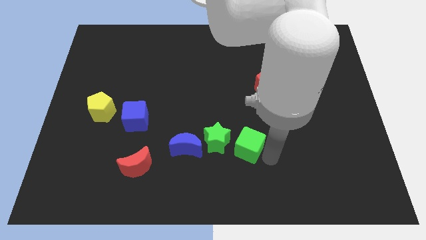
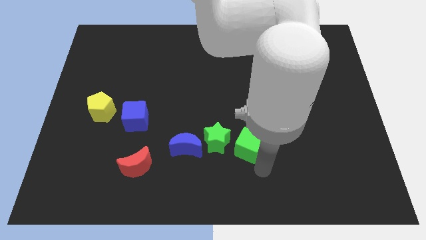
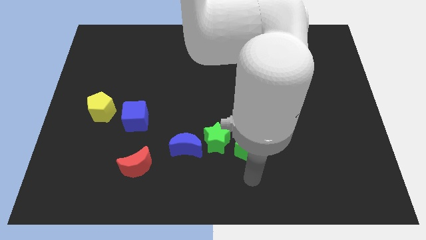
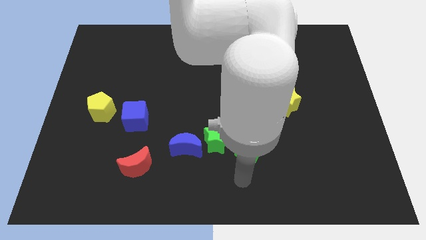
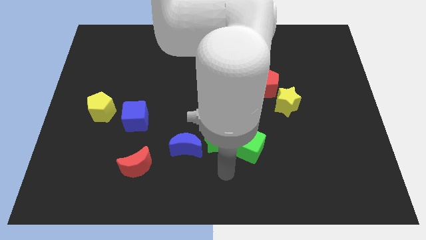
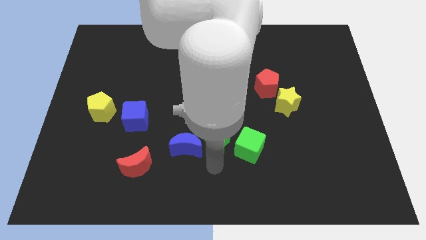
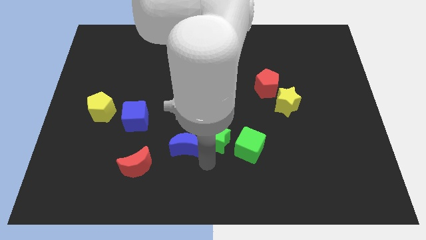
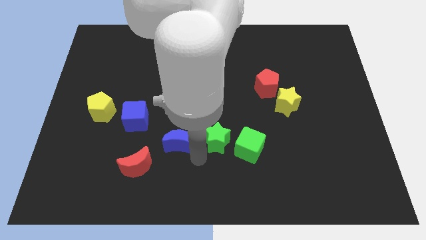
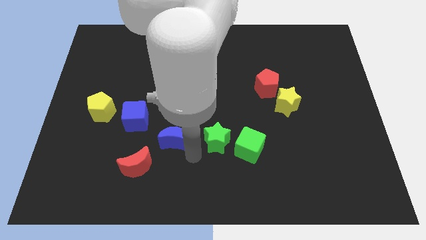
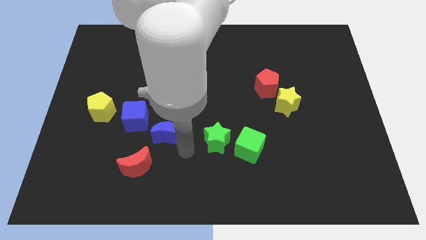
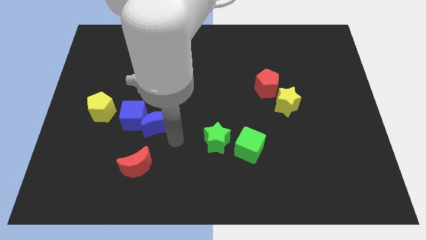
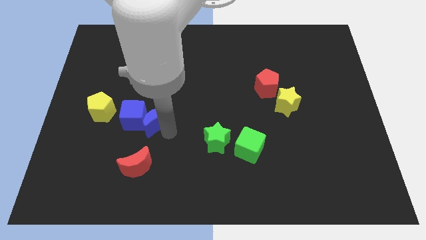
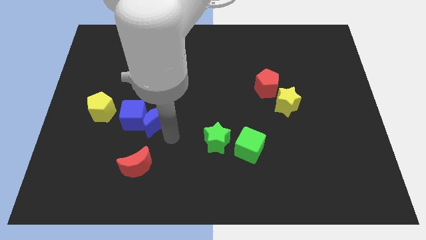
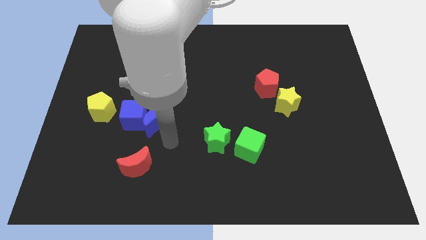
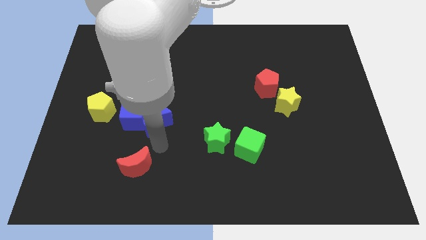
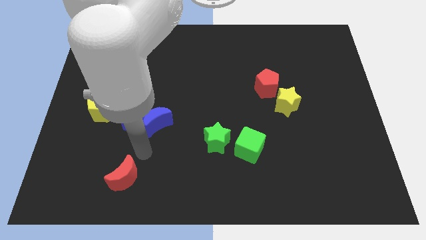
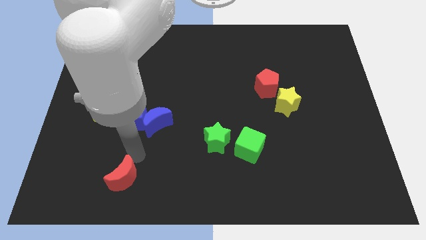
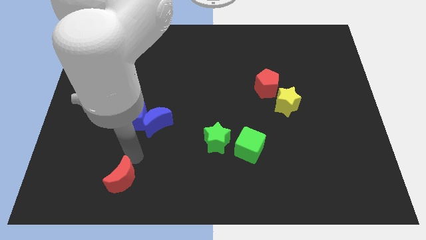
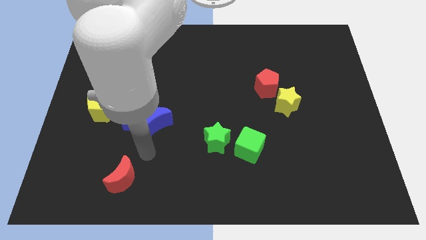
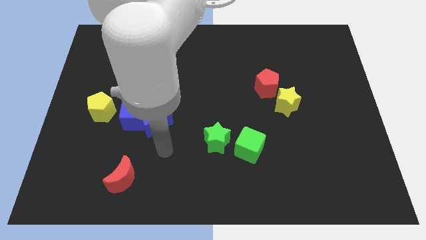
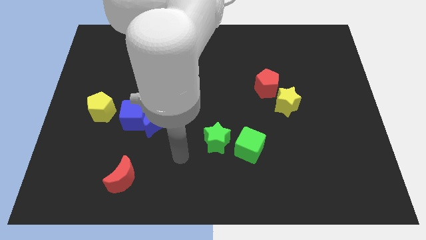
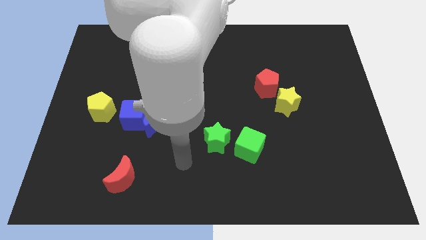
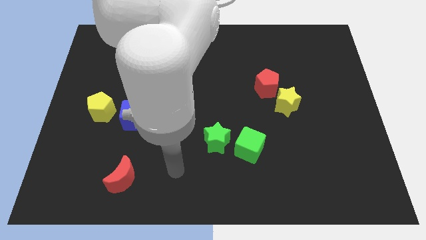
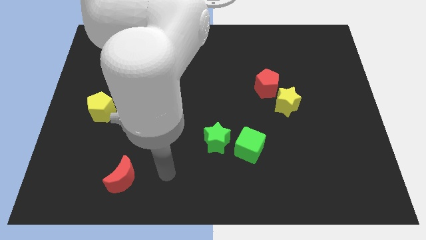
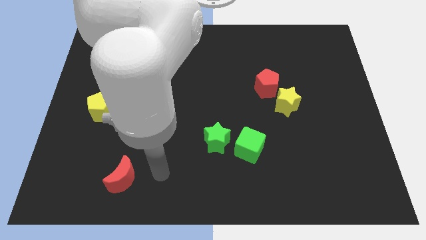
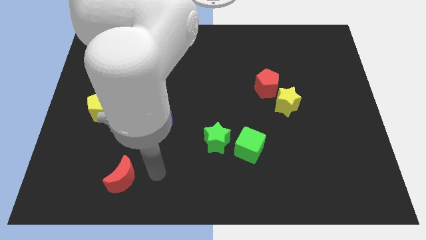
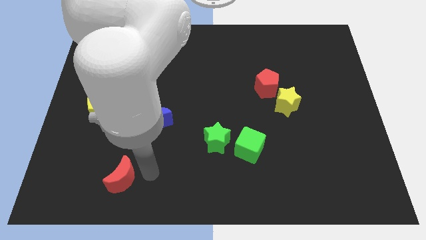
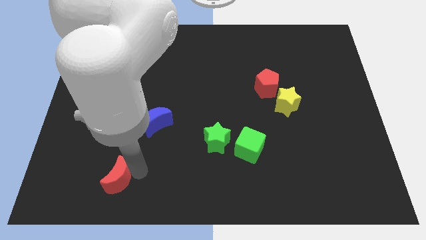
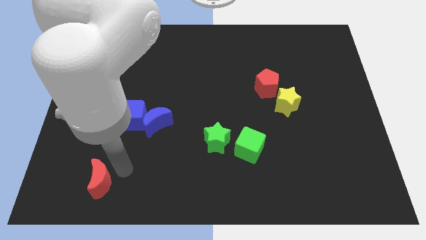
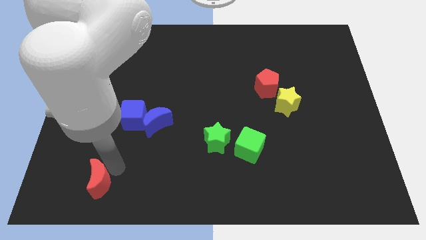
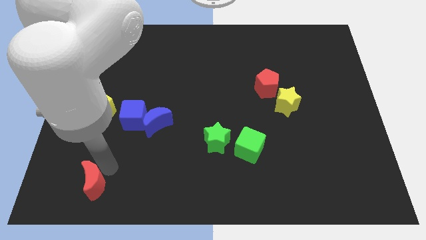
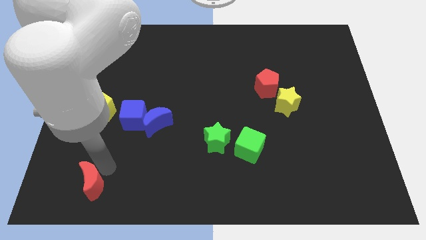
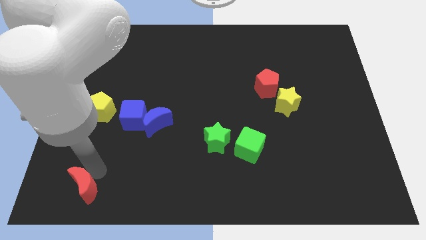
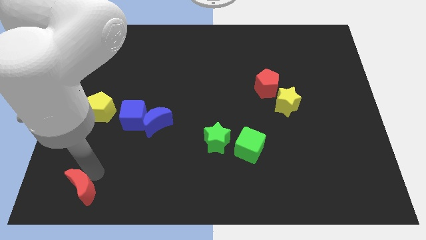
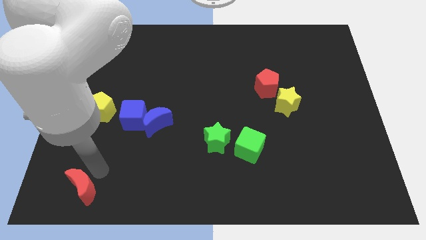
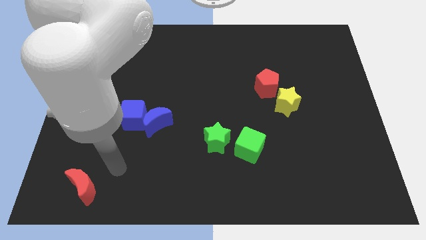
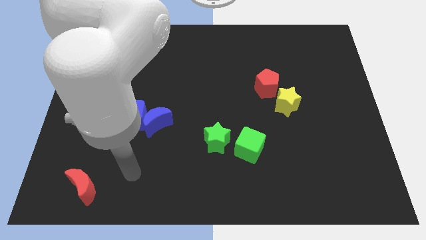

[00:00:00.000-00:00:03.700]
push both the crescents diagonal to each other

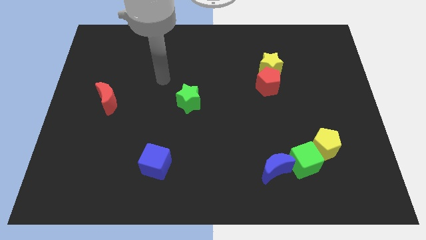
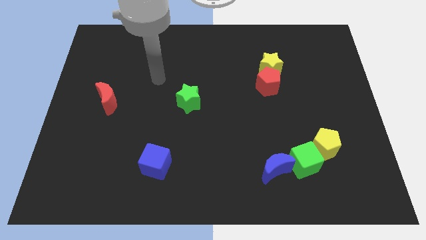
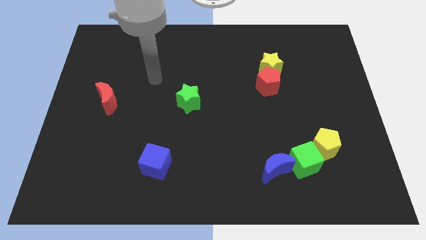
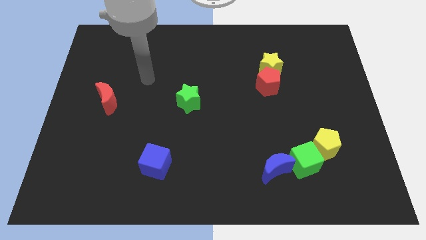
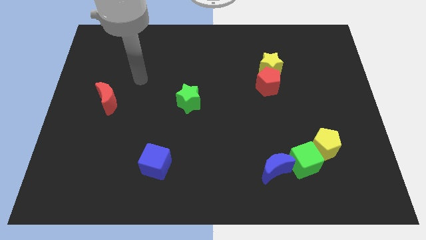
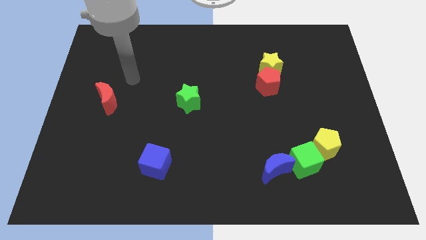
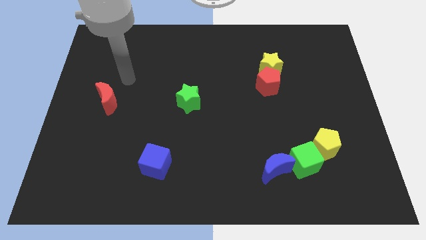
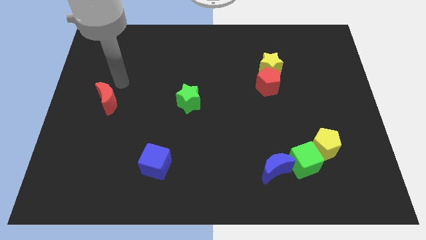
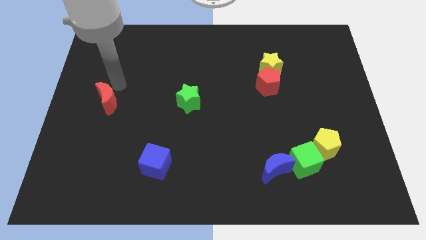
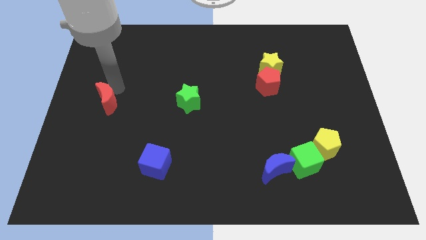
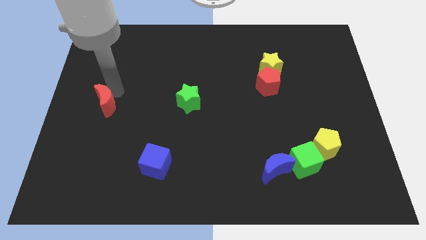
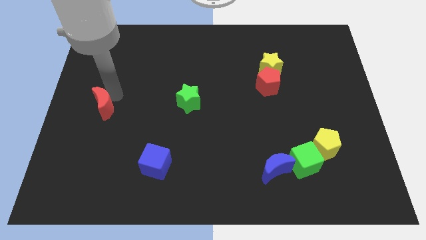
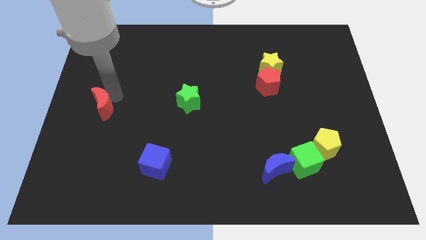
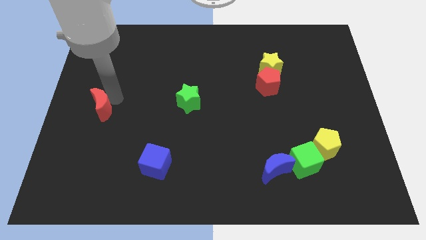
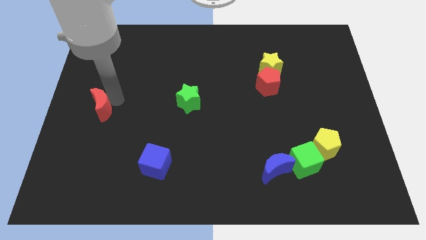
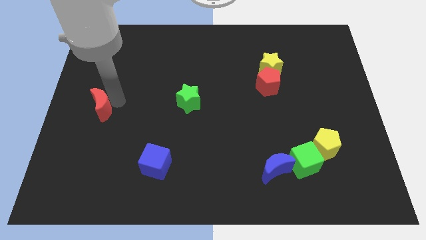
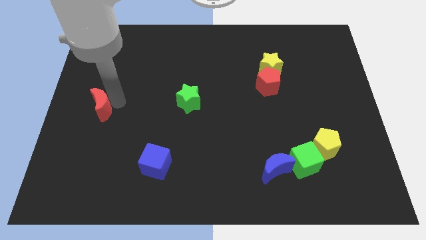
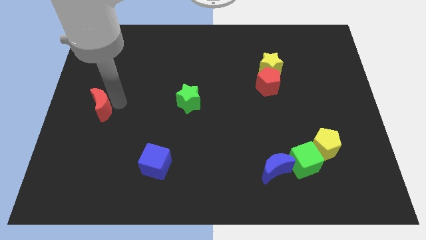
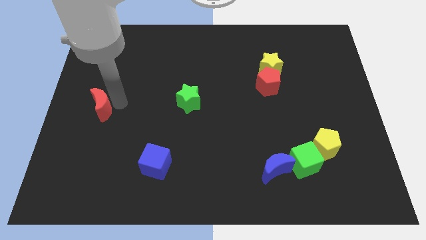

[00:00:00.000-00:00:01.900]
slightly push the red crescent to the left center of the board

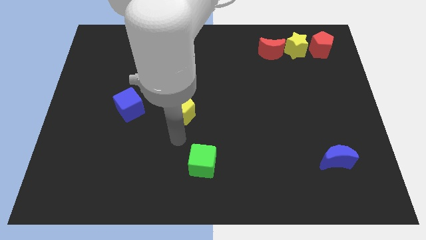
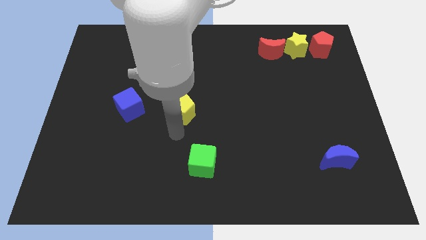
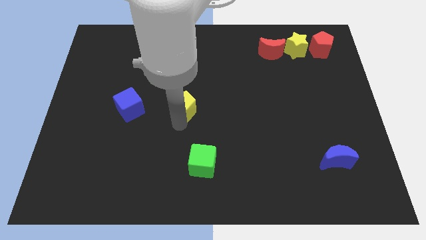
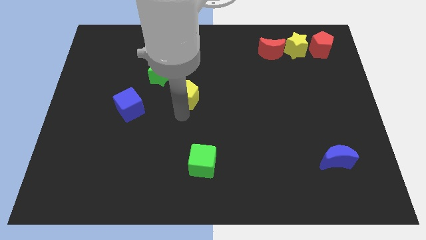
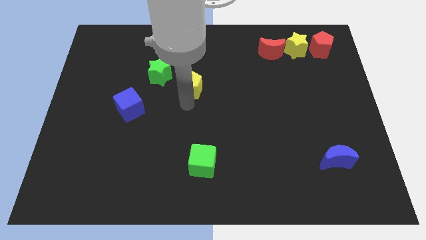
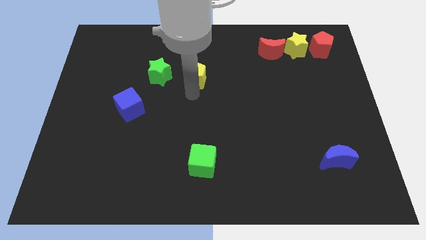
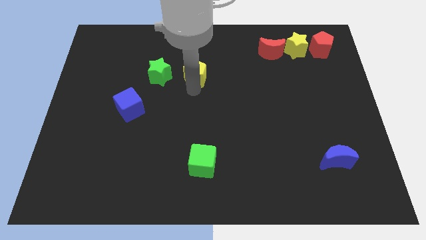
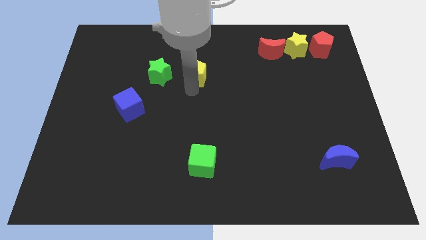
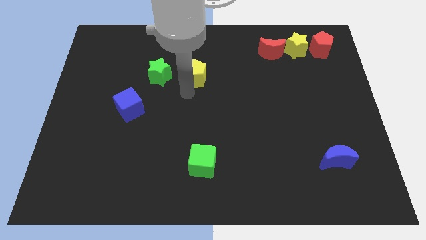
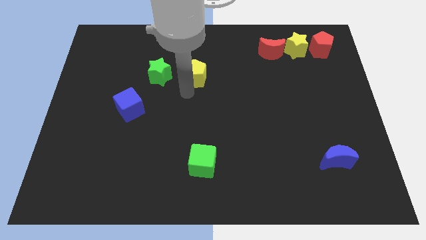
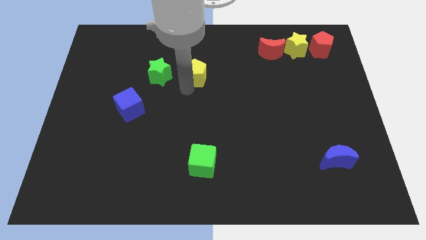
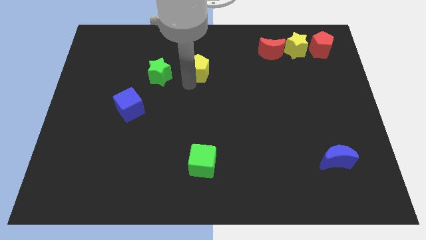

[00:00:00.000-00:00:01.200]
place the yellow pentagon right to the green star

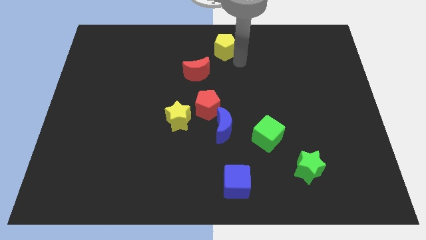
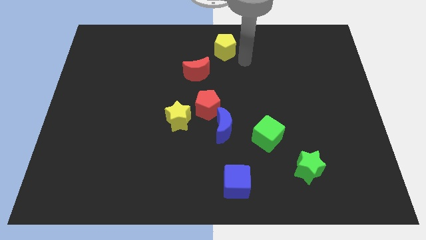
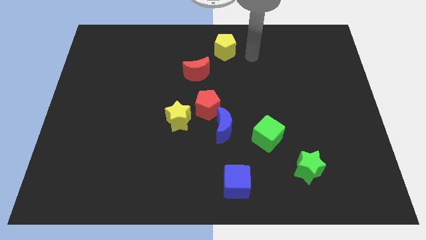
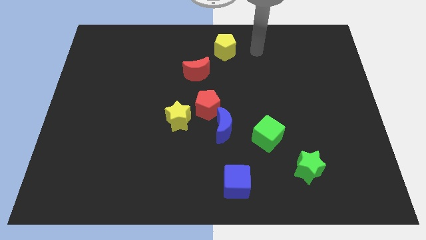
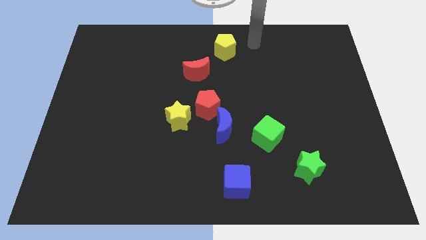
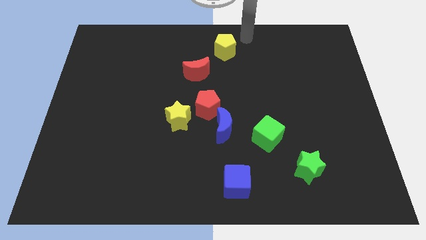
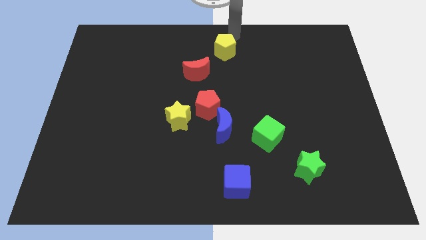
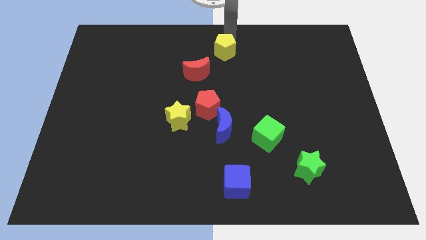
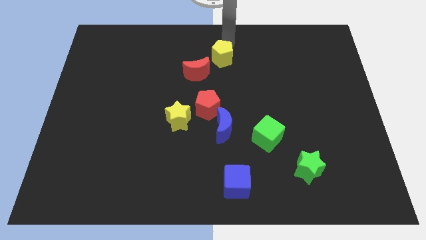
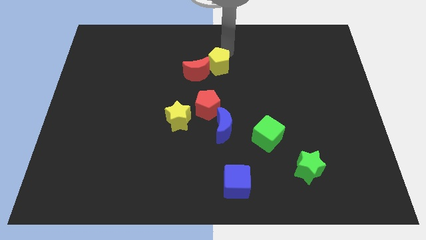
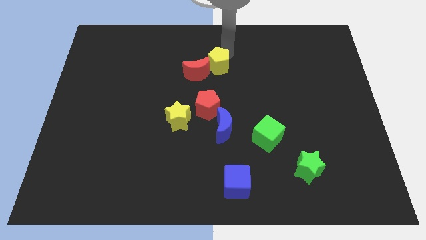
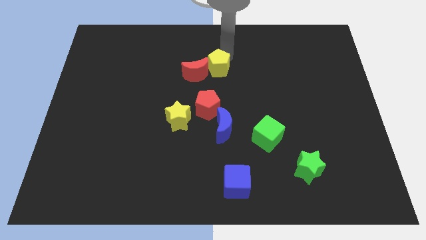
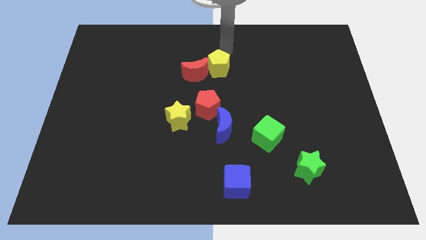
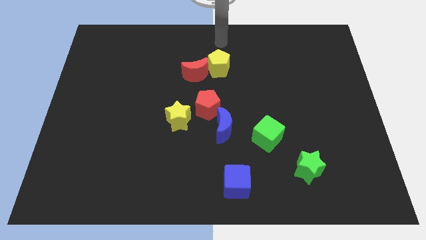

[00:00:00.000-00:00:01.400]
move the yellow pentagon into the red crescent

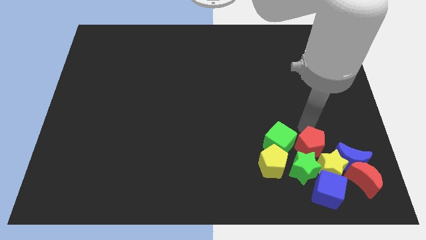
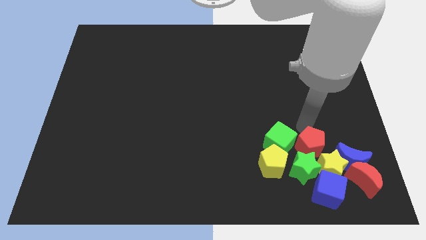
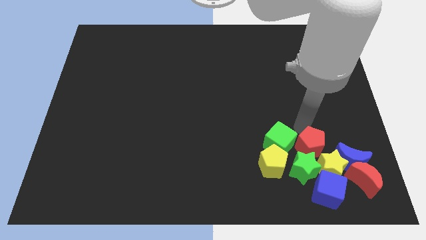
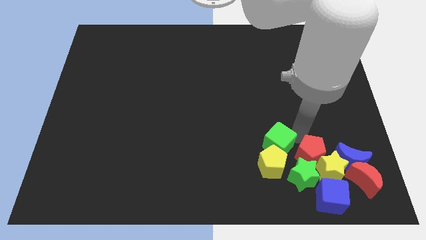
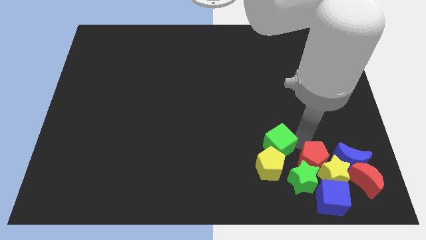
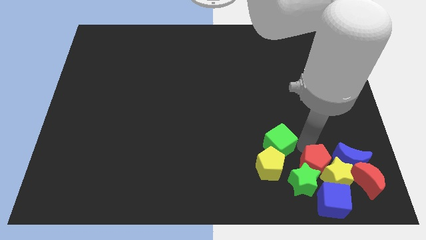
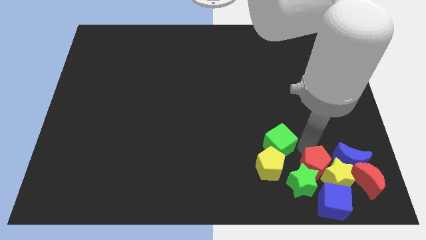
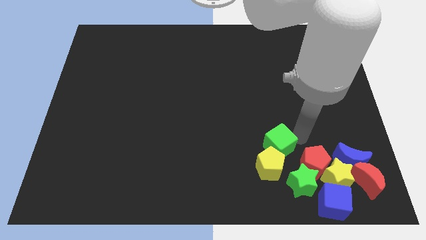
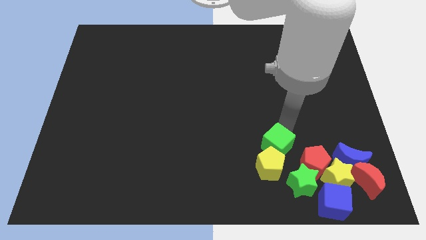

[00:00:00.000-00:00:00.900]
push the red pentagon towards bottom
